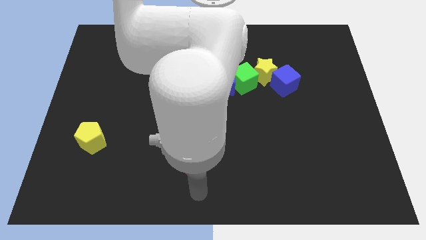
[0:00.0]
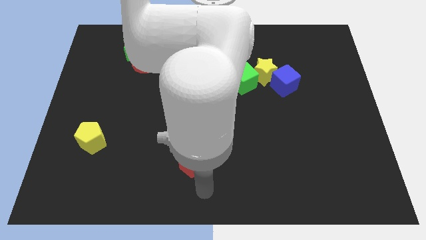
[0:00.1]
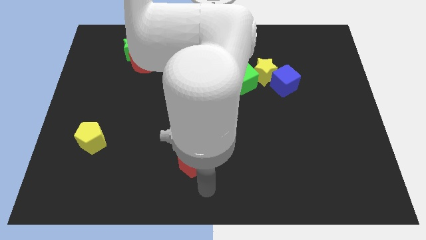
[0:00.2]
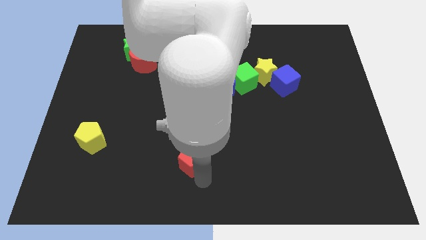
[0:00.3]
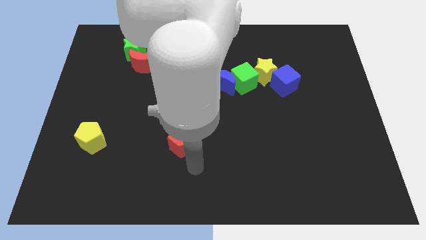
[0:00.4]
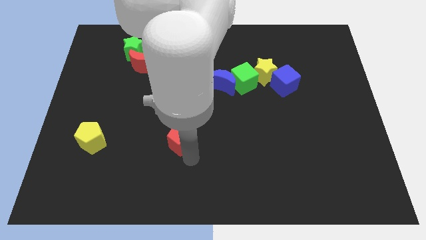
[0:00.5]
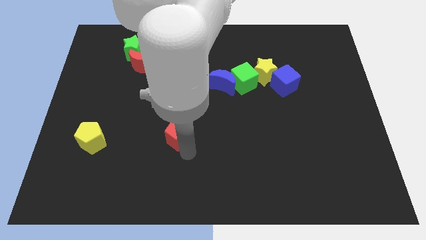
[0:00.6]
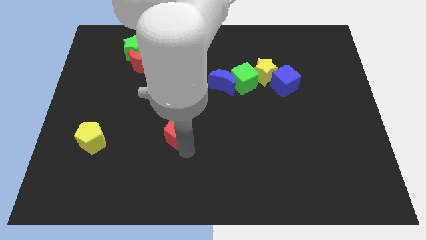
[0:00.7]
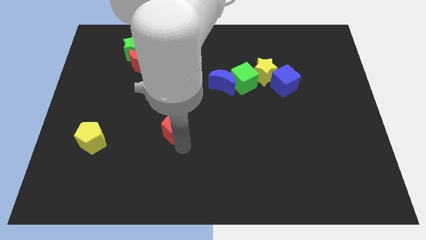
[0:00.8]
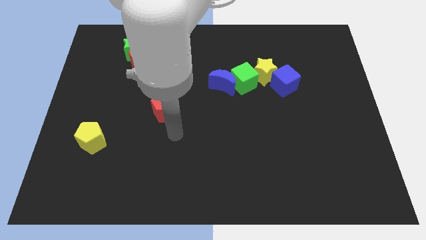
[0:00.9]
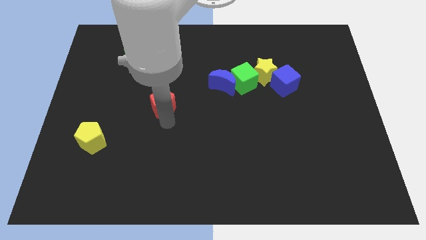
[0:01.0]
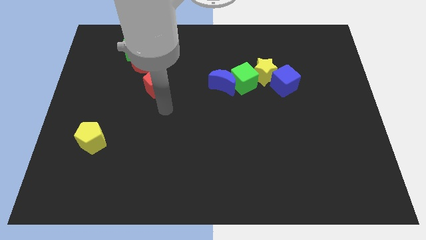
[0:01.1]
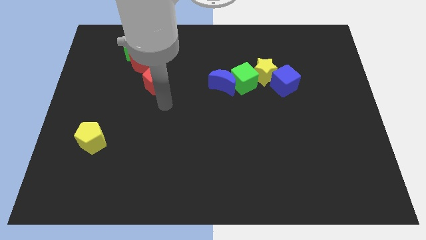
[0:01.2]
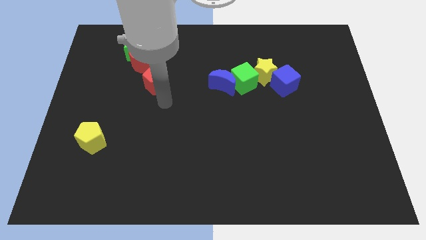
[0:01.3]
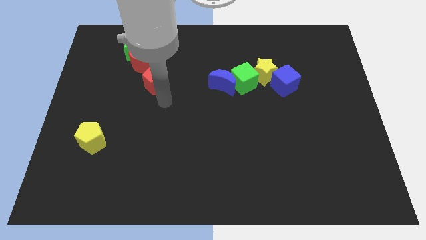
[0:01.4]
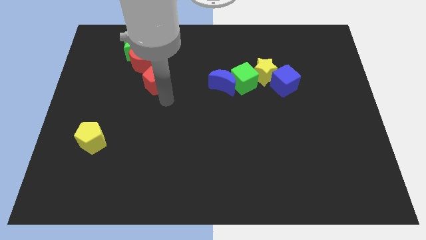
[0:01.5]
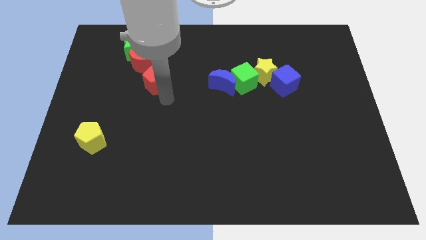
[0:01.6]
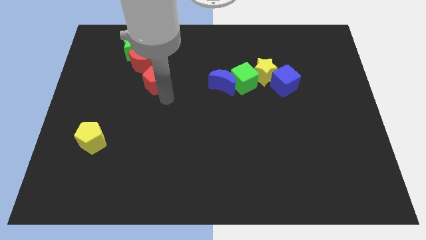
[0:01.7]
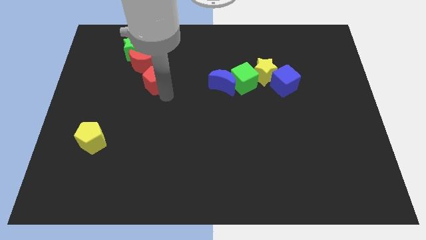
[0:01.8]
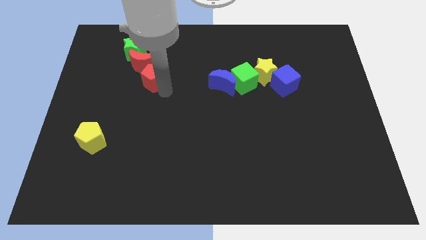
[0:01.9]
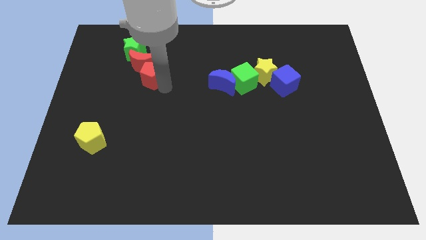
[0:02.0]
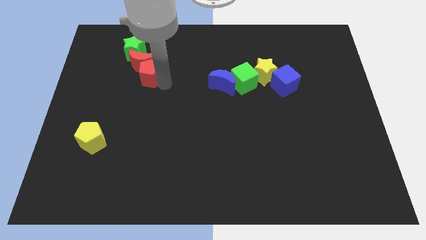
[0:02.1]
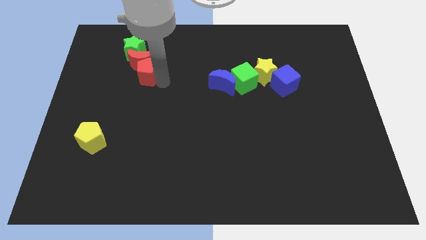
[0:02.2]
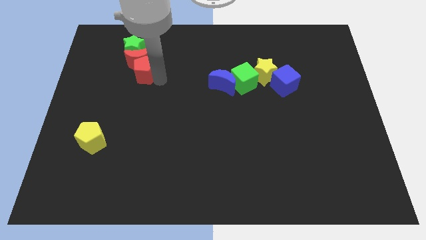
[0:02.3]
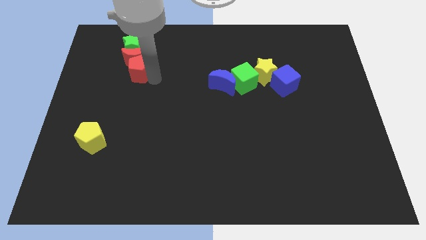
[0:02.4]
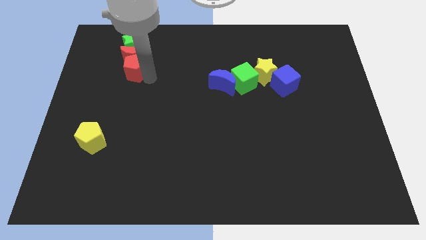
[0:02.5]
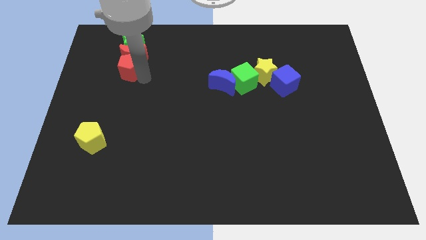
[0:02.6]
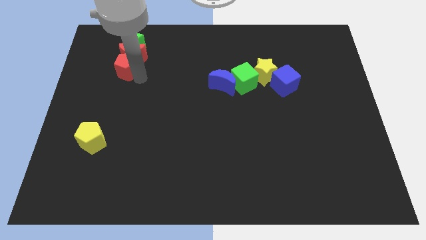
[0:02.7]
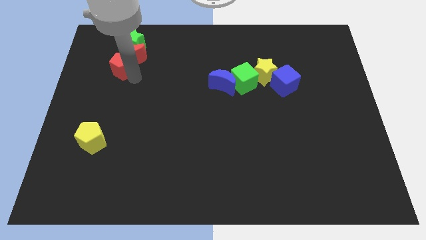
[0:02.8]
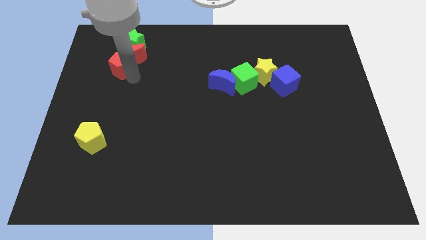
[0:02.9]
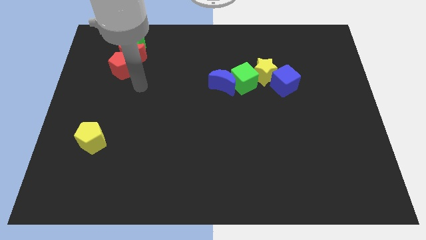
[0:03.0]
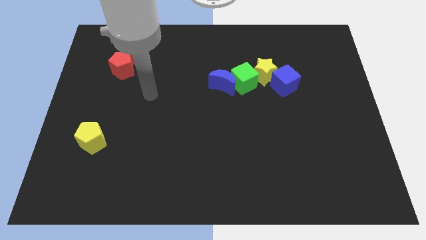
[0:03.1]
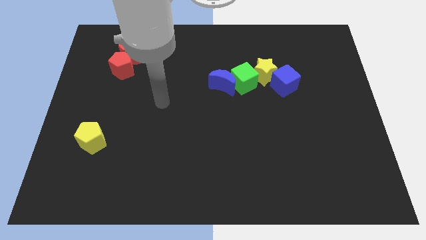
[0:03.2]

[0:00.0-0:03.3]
push the red pentagon into the red moon

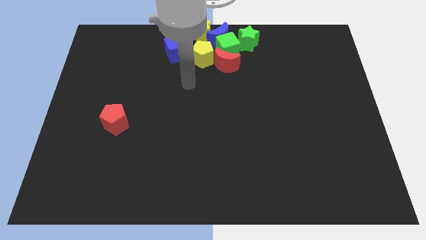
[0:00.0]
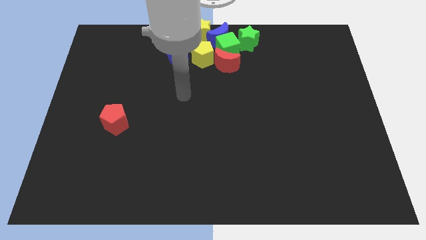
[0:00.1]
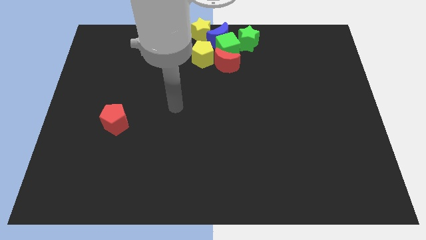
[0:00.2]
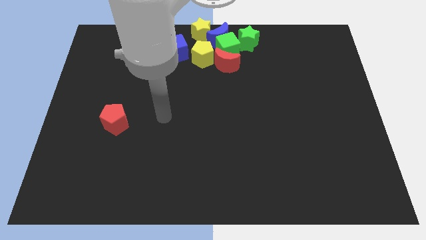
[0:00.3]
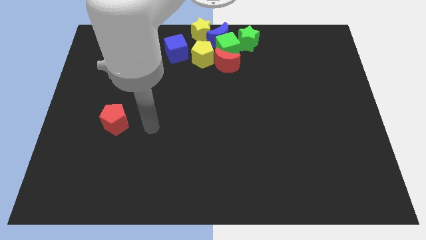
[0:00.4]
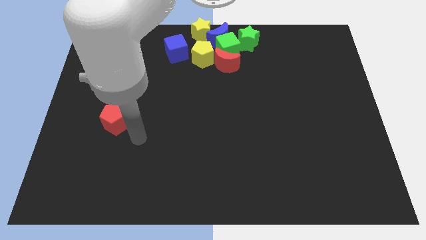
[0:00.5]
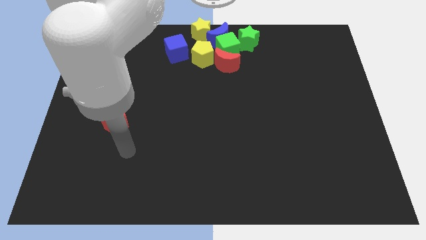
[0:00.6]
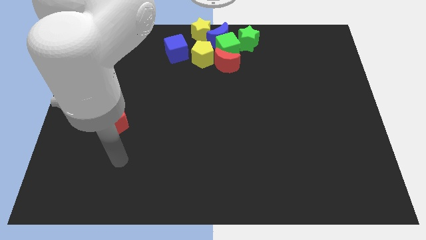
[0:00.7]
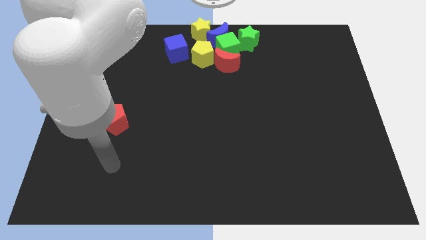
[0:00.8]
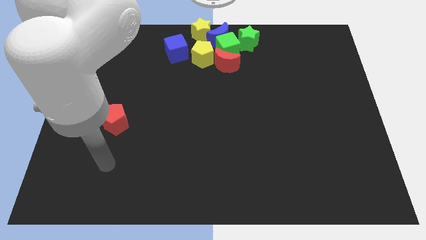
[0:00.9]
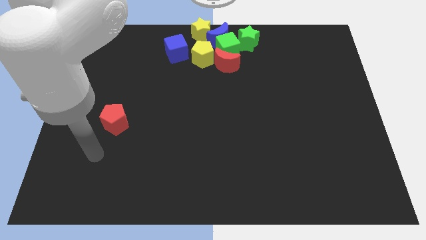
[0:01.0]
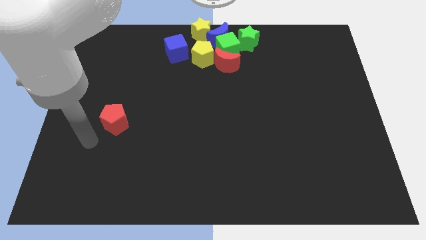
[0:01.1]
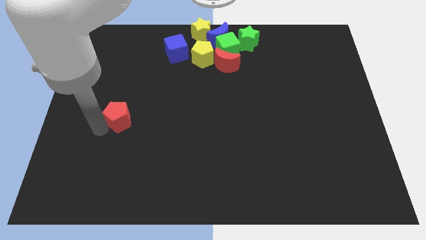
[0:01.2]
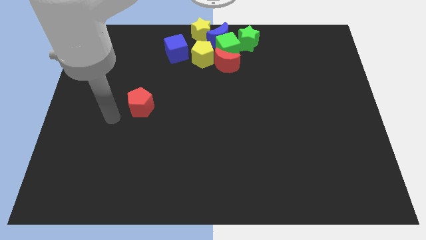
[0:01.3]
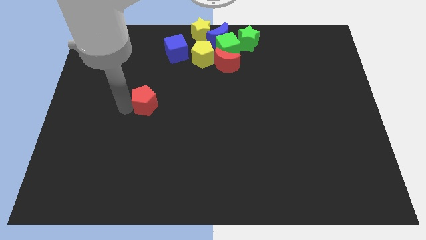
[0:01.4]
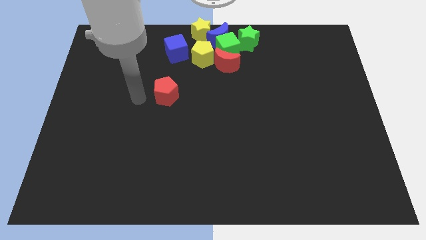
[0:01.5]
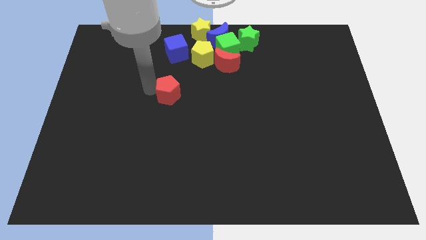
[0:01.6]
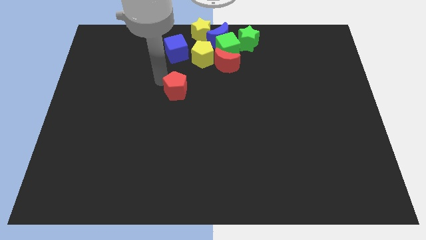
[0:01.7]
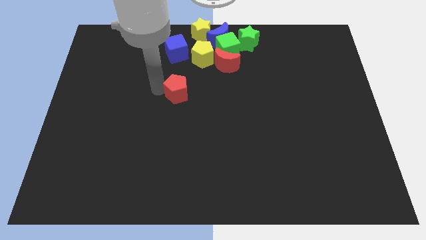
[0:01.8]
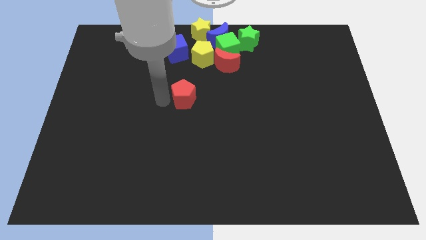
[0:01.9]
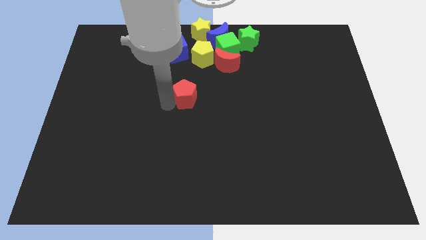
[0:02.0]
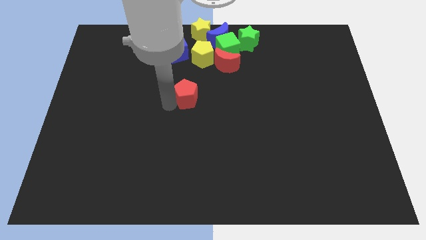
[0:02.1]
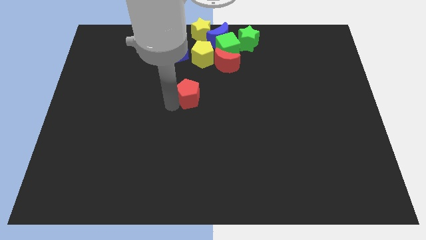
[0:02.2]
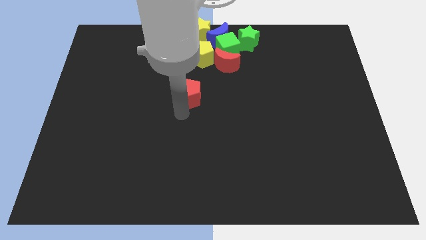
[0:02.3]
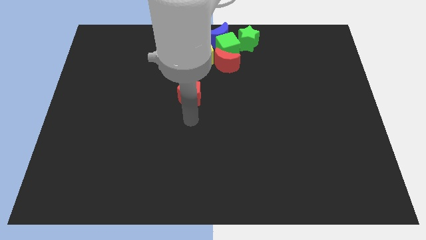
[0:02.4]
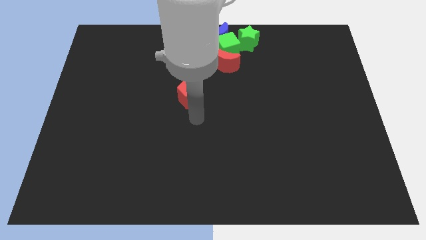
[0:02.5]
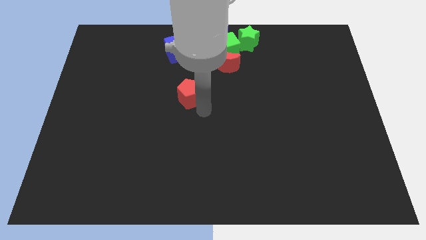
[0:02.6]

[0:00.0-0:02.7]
place the red pentagon diagonal to the bottom left of the red crescent

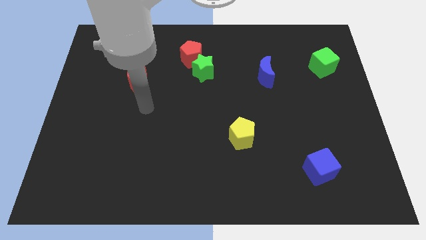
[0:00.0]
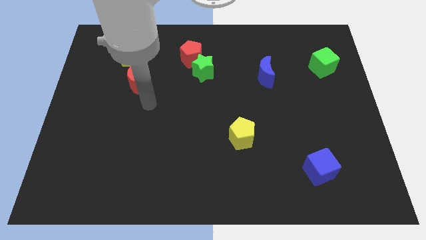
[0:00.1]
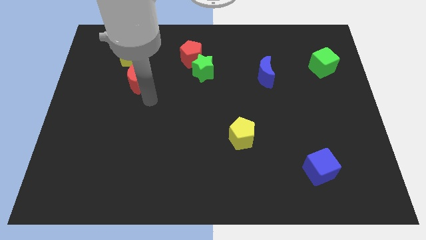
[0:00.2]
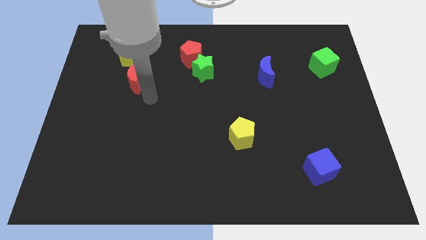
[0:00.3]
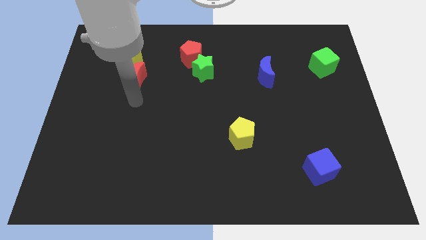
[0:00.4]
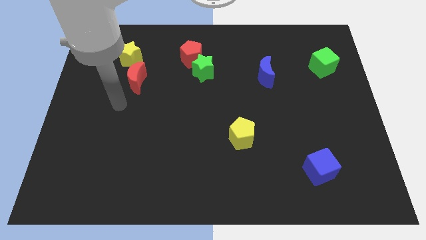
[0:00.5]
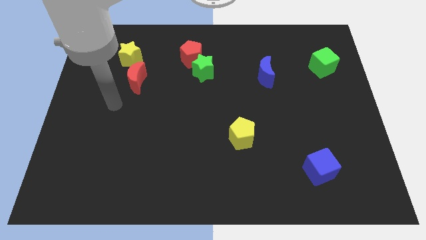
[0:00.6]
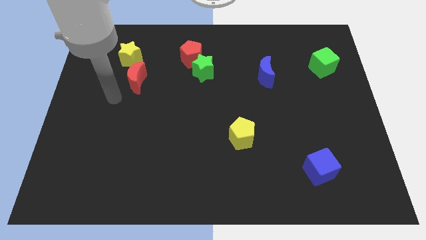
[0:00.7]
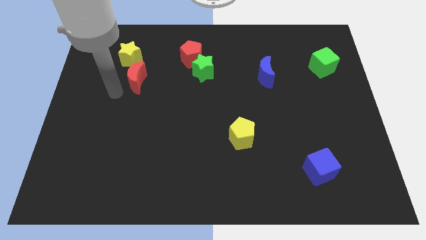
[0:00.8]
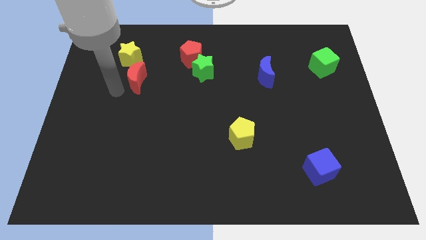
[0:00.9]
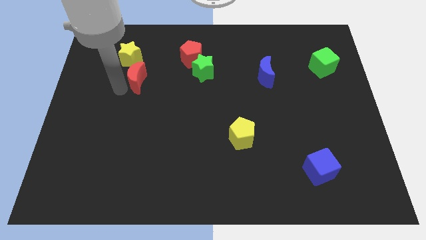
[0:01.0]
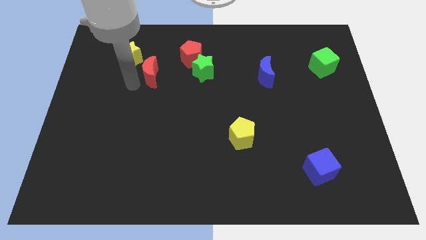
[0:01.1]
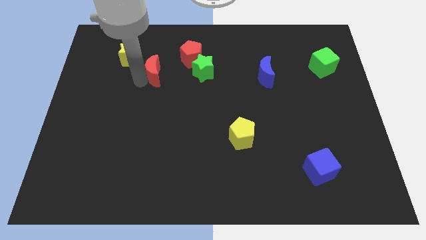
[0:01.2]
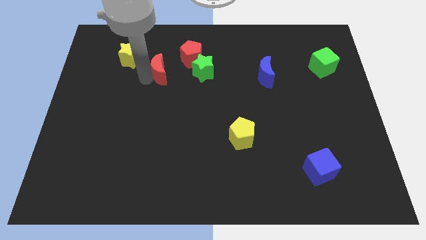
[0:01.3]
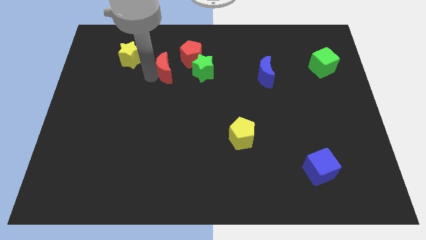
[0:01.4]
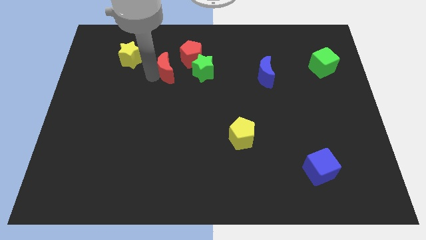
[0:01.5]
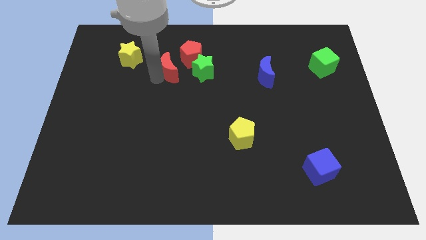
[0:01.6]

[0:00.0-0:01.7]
move the red crescent to the left of the green star

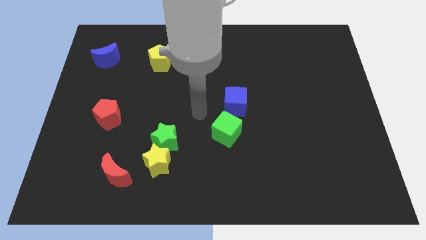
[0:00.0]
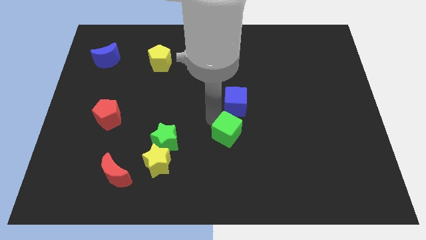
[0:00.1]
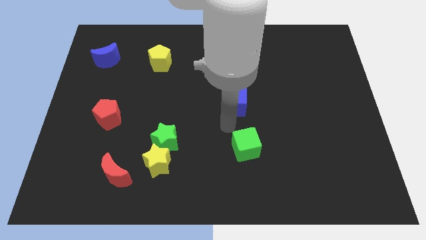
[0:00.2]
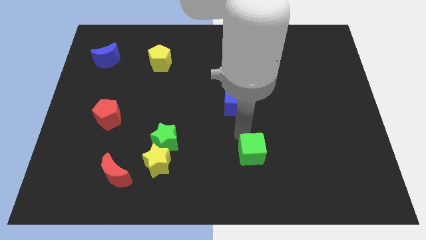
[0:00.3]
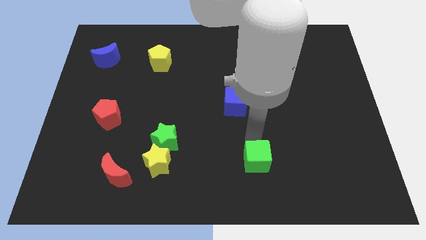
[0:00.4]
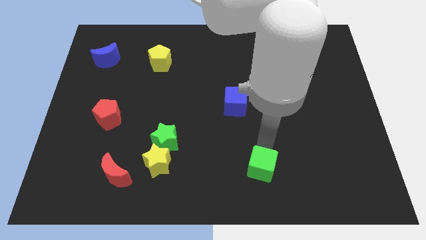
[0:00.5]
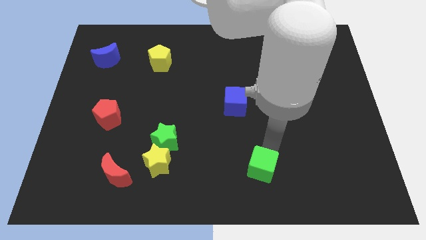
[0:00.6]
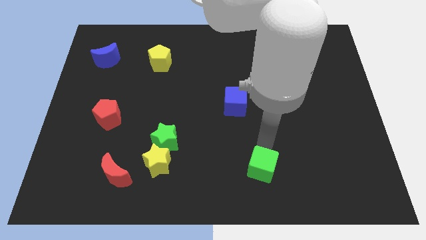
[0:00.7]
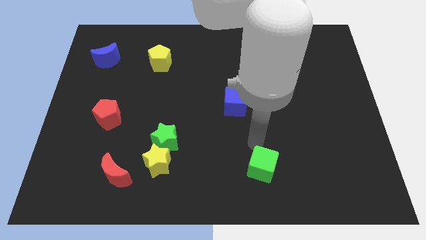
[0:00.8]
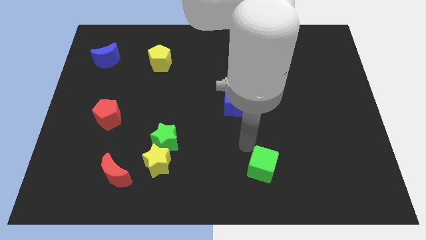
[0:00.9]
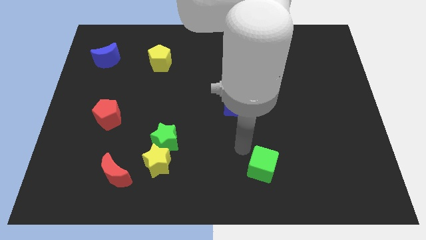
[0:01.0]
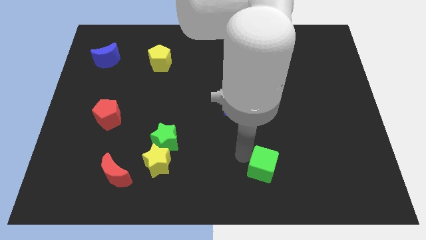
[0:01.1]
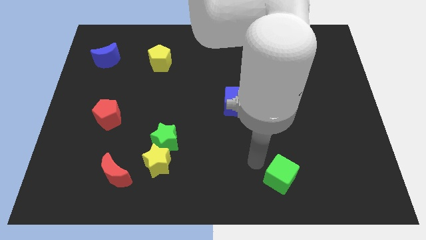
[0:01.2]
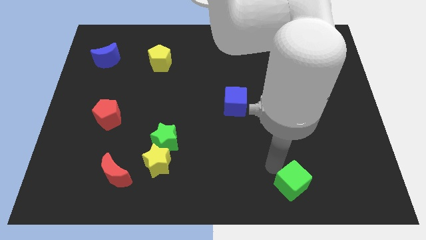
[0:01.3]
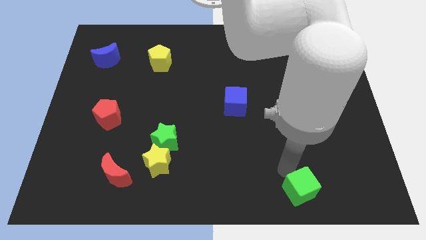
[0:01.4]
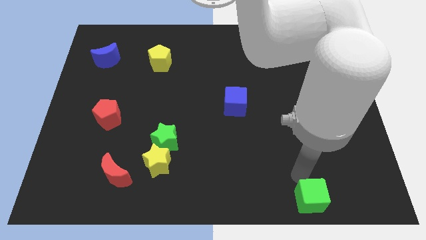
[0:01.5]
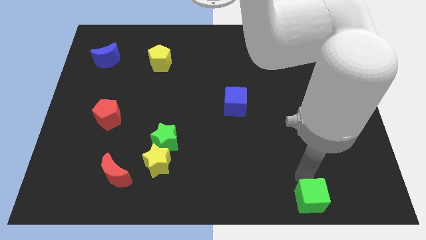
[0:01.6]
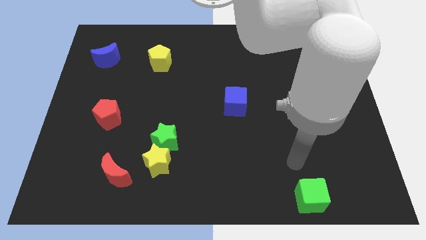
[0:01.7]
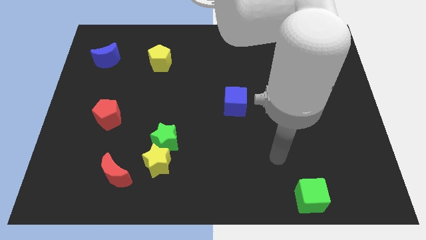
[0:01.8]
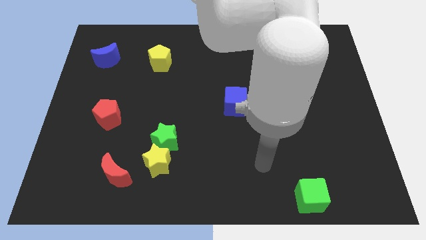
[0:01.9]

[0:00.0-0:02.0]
move green cube to the bottom of the board
